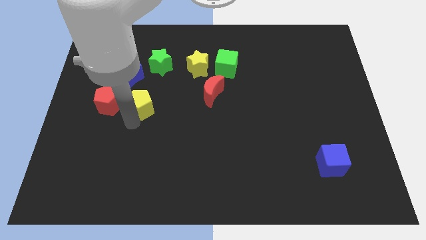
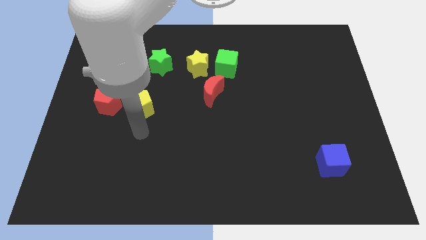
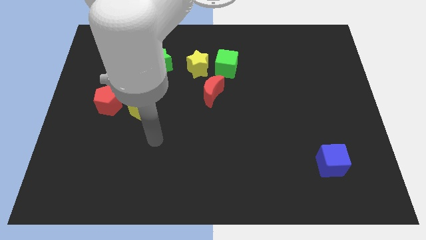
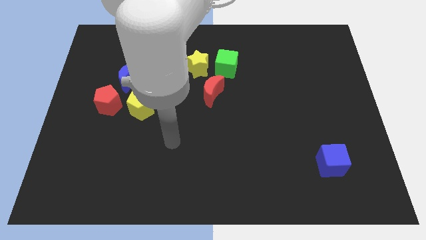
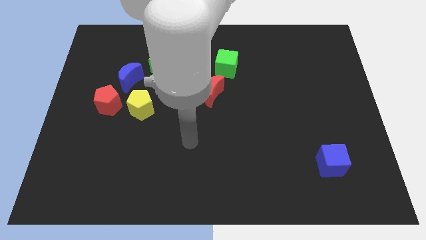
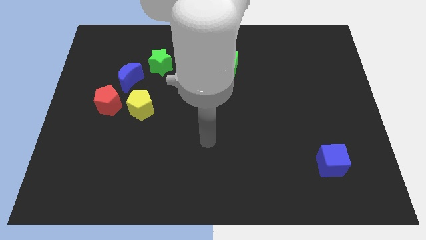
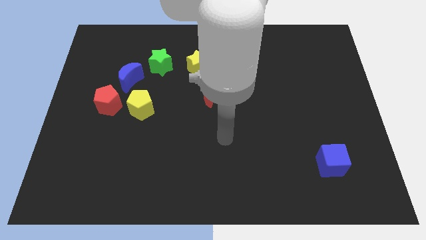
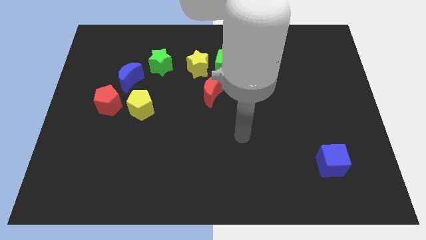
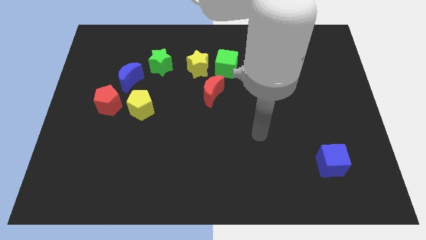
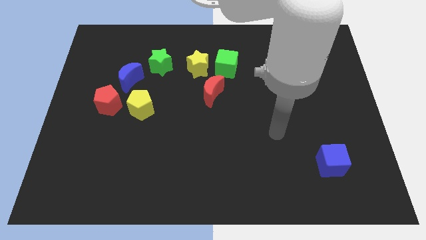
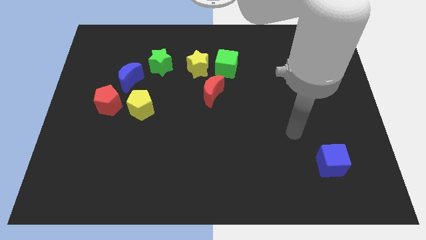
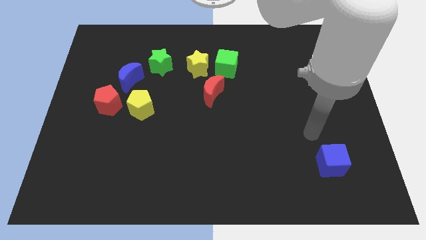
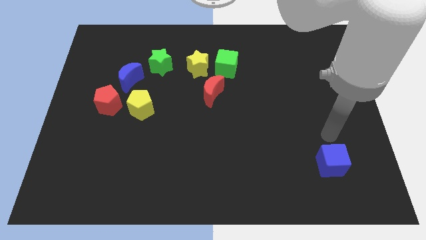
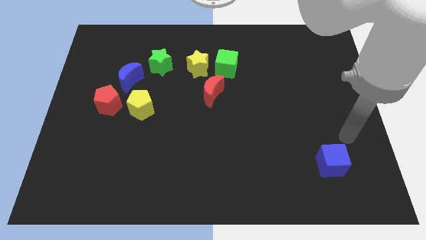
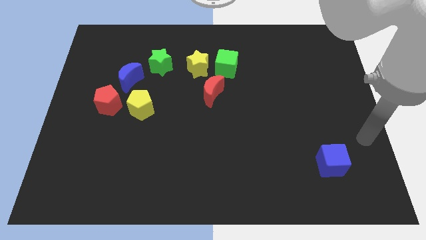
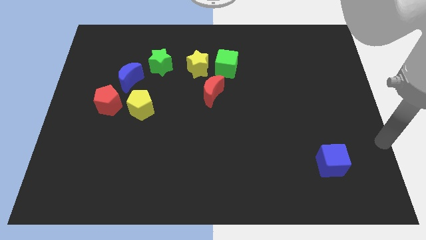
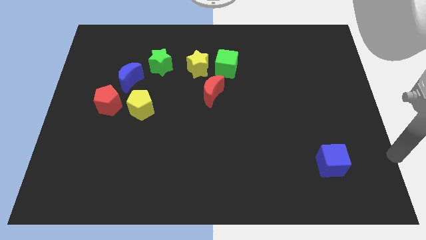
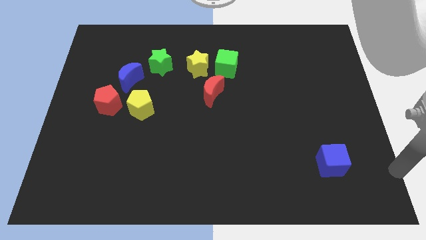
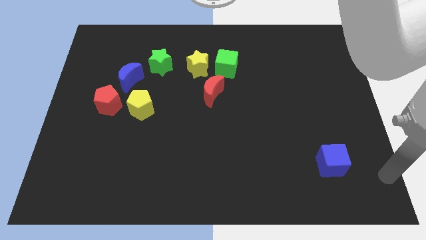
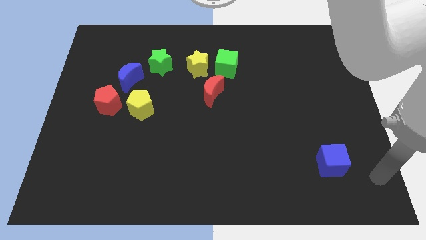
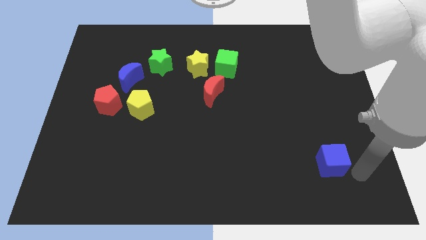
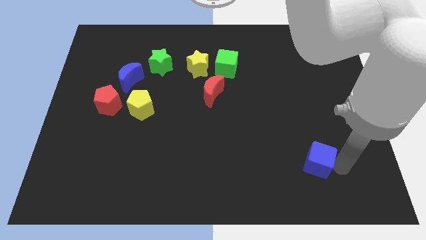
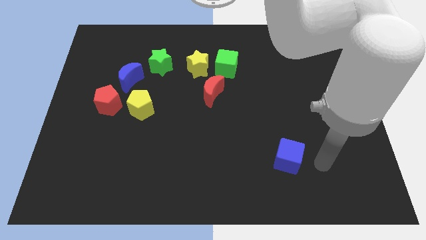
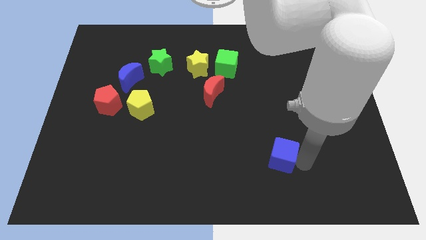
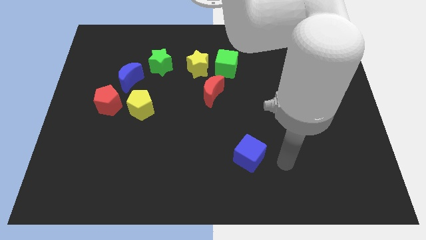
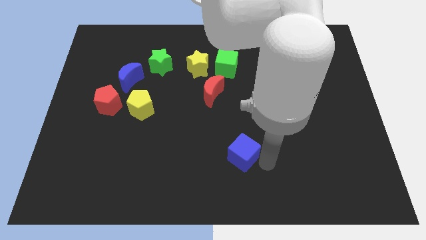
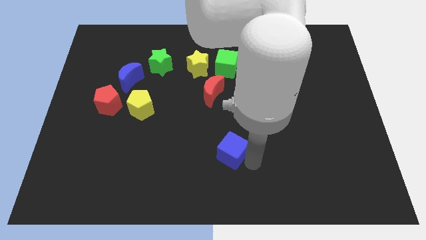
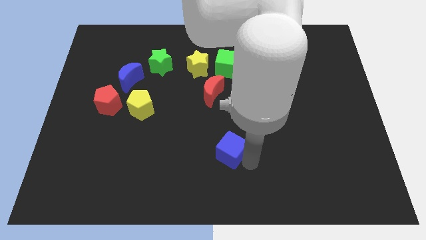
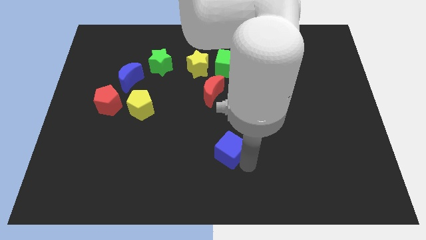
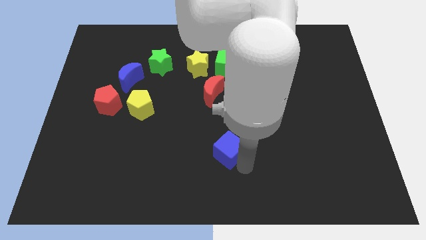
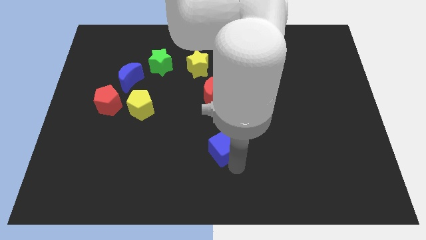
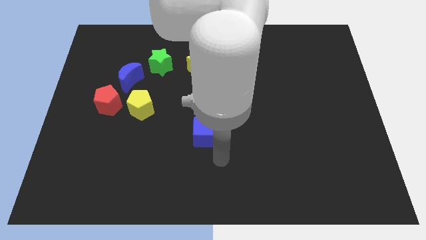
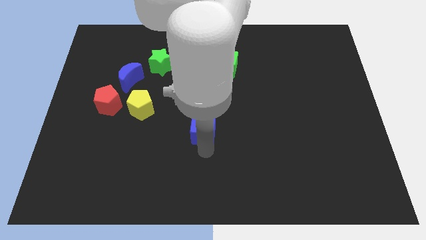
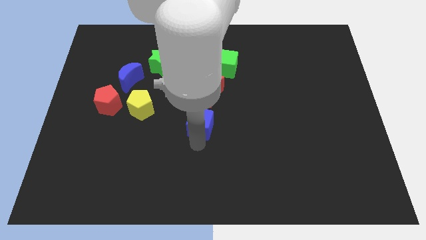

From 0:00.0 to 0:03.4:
push the blue cube towards the center of the board

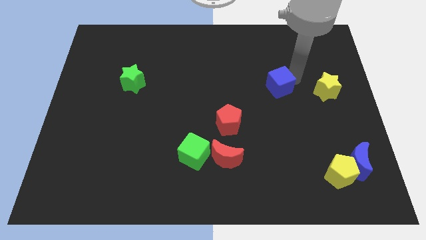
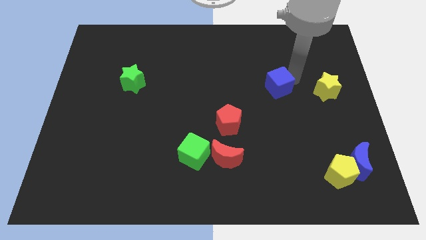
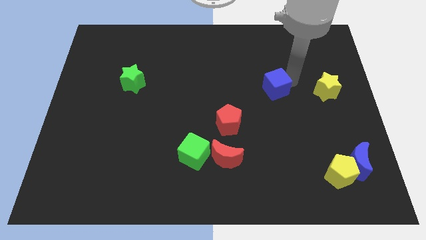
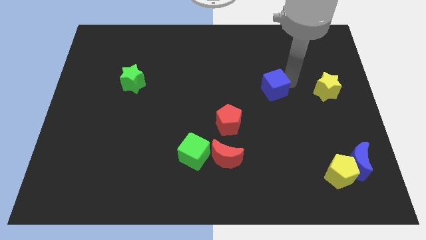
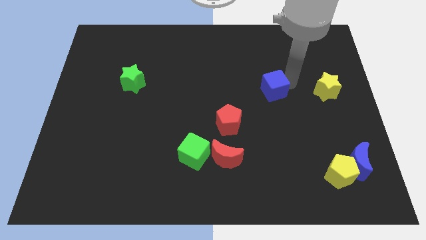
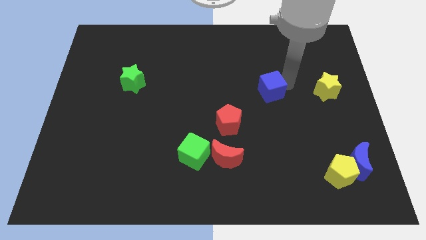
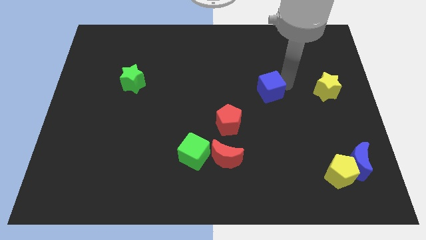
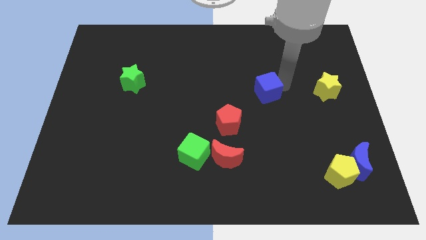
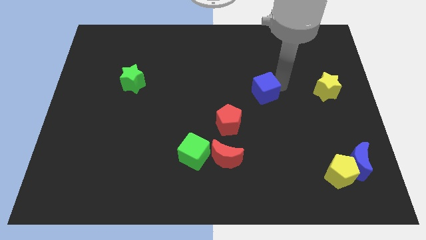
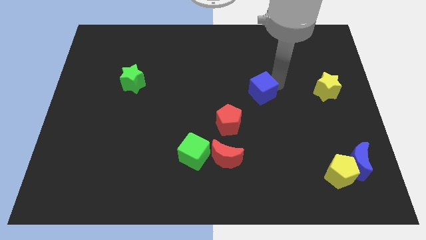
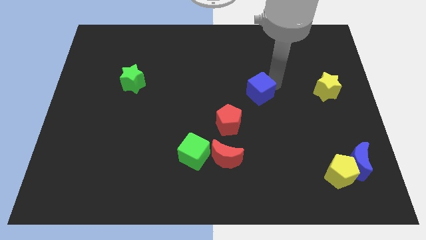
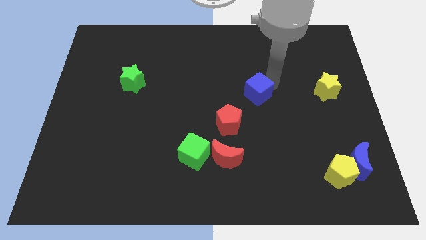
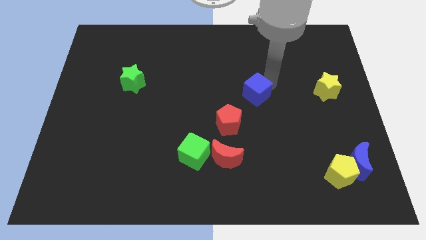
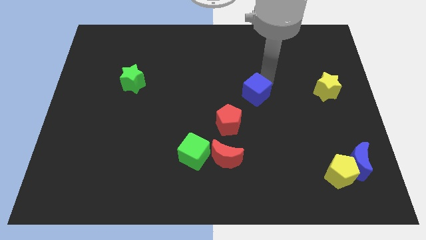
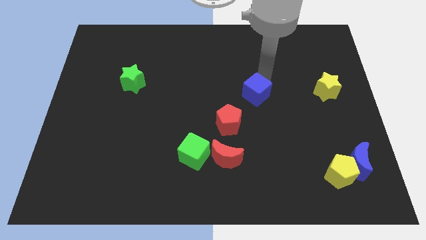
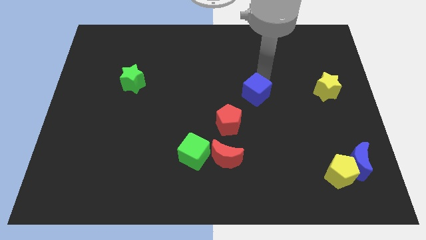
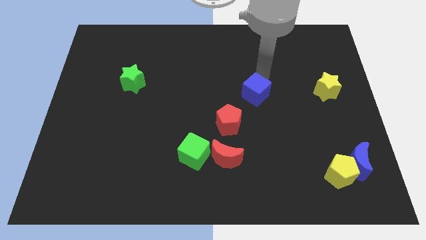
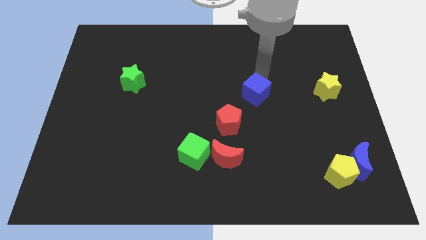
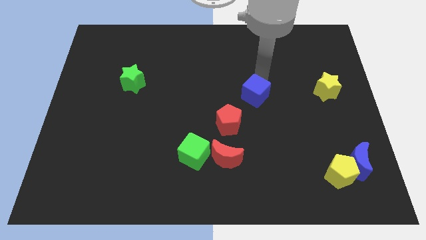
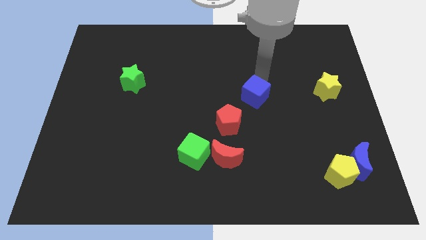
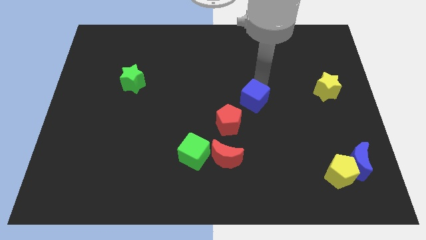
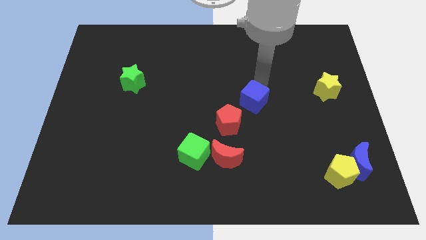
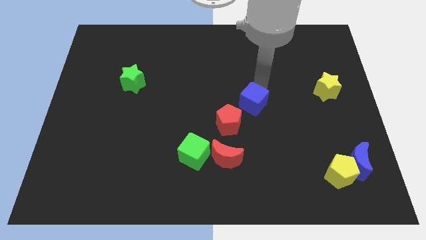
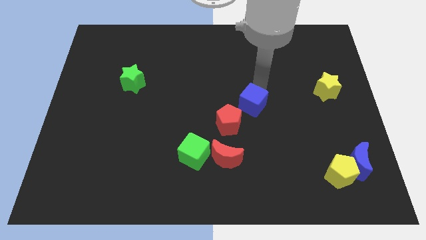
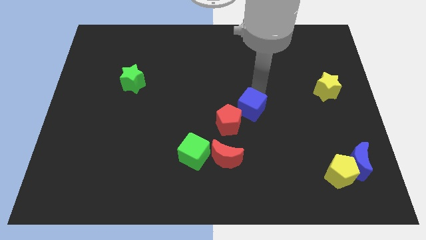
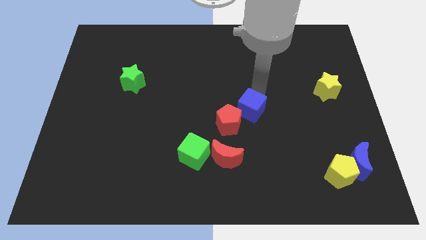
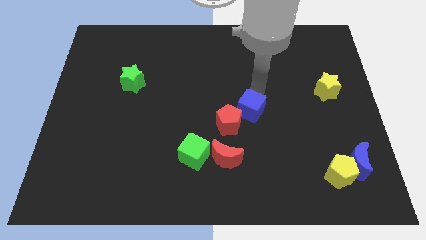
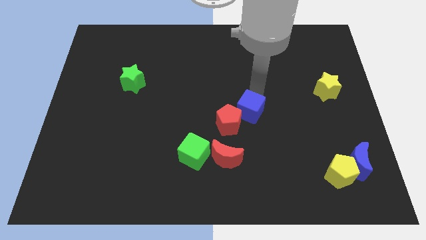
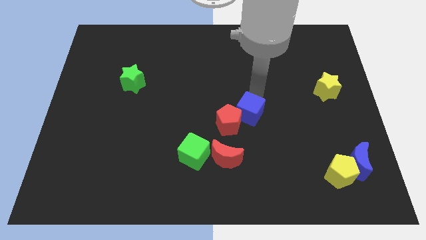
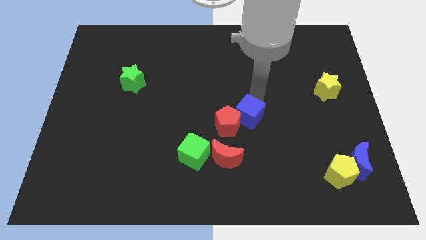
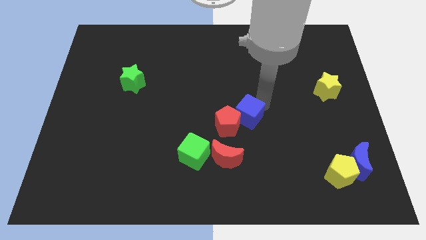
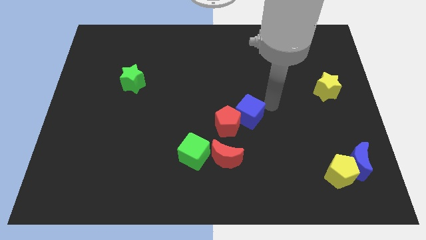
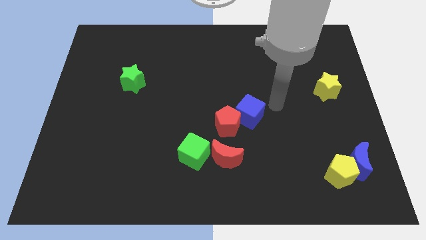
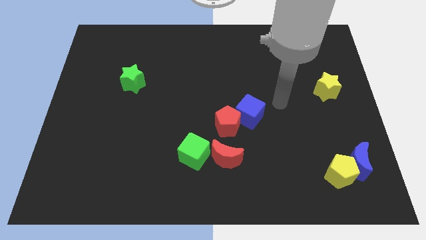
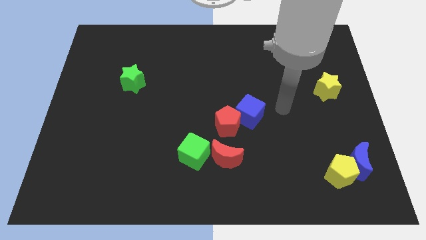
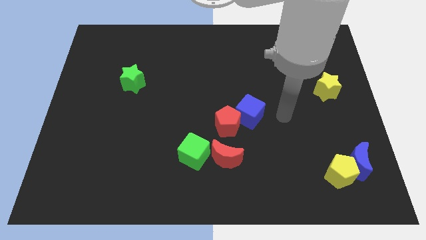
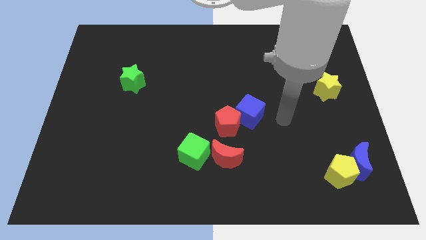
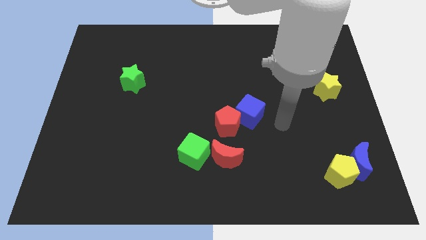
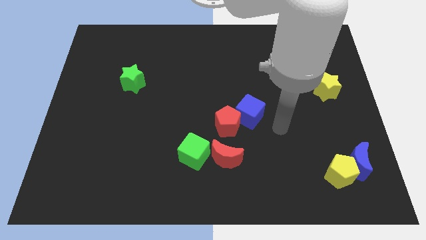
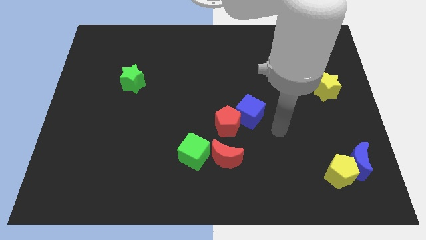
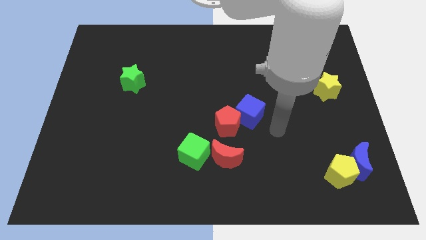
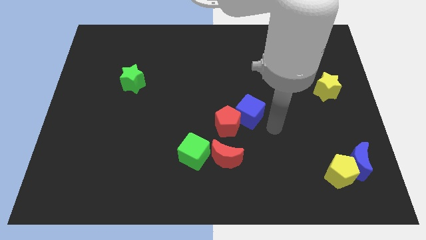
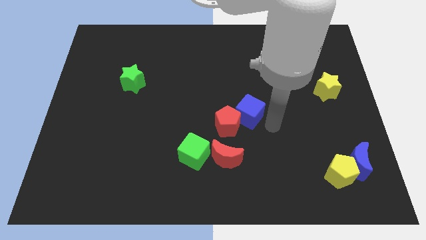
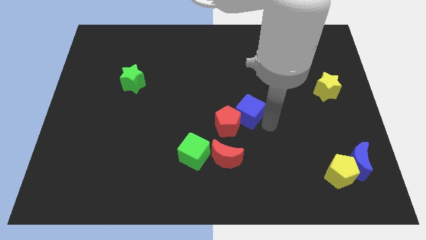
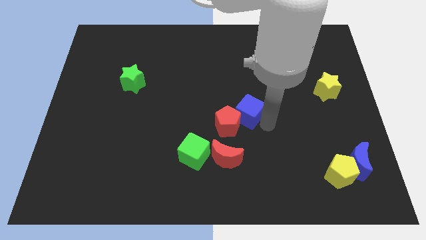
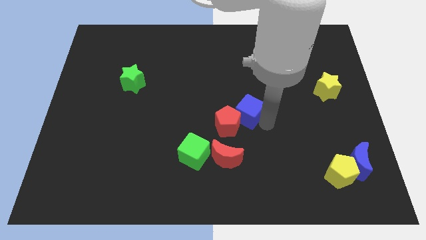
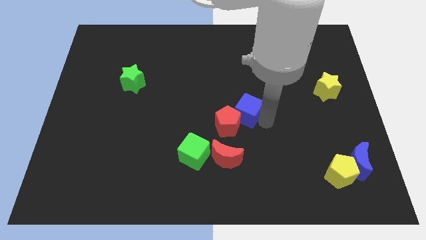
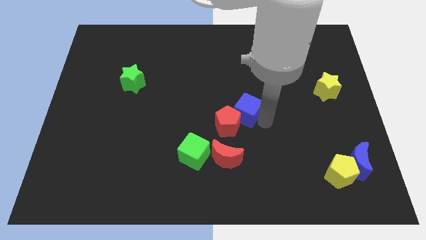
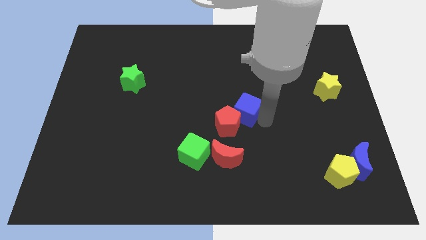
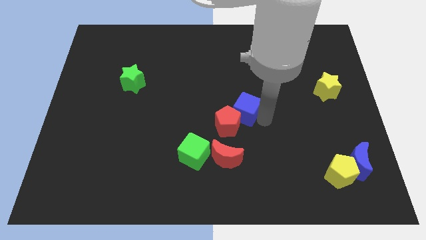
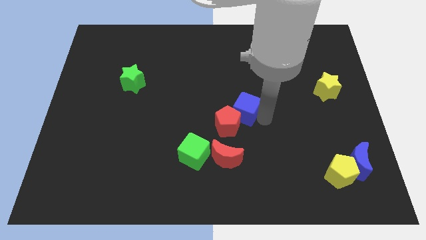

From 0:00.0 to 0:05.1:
push the blue cube to the top right of the red pentagon

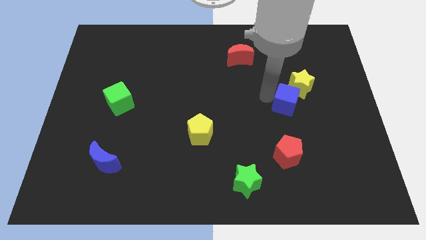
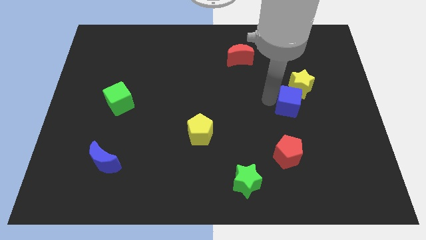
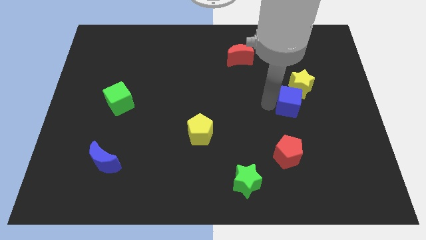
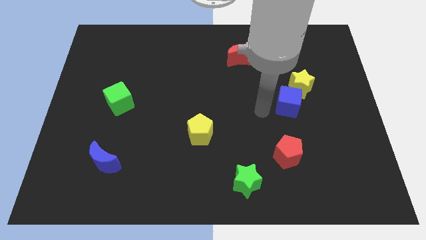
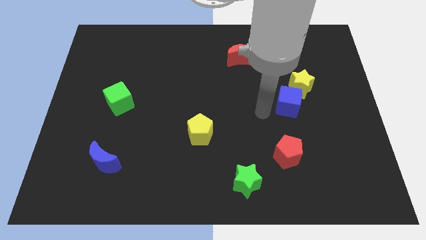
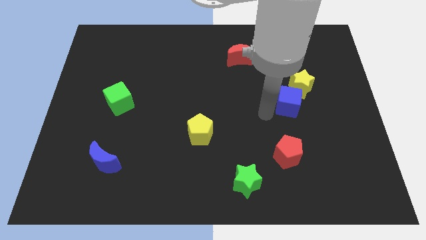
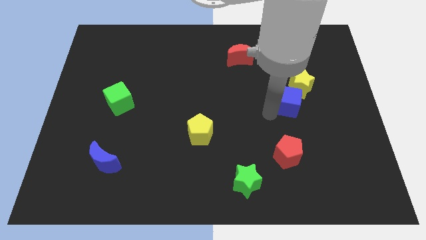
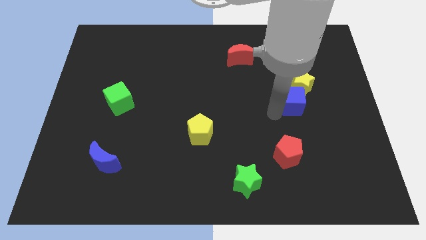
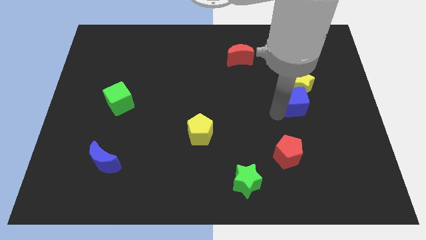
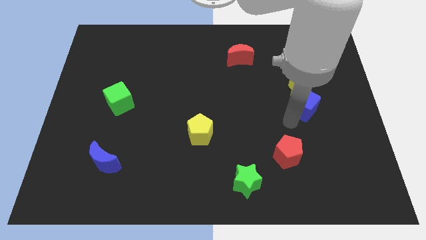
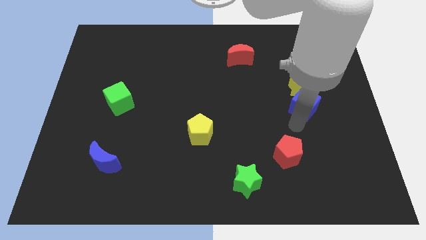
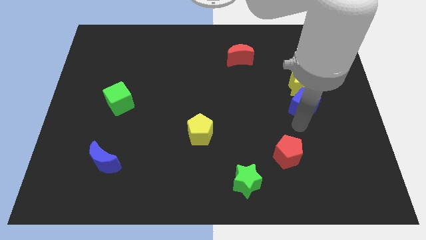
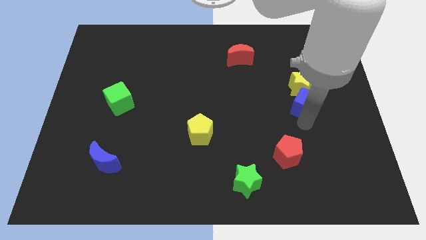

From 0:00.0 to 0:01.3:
place the blue cube below the yellow star
